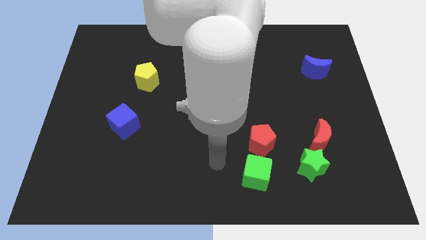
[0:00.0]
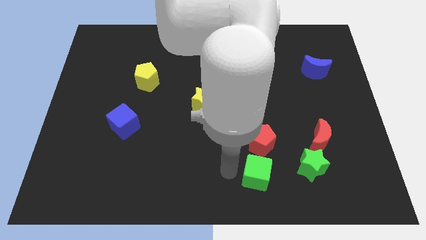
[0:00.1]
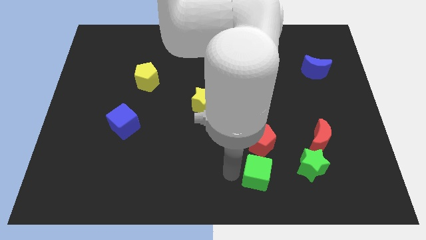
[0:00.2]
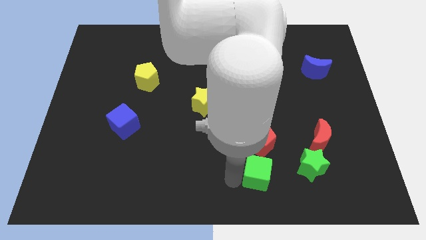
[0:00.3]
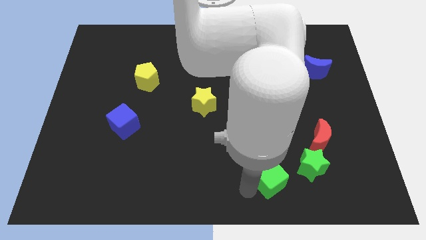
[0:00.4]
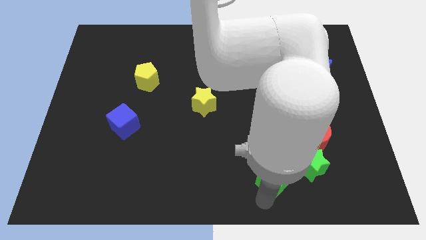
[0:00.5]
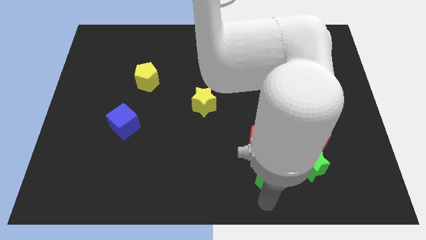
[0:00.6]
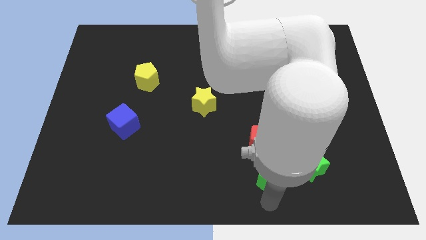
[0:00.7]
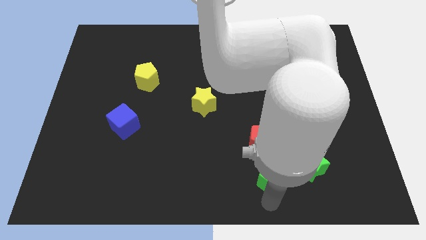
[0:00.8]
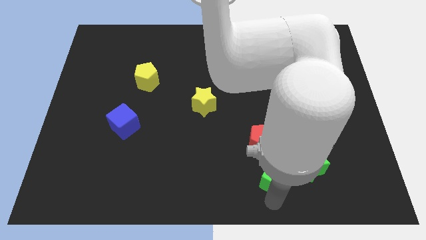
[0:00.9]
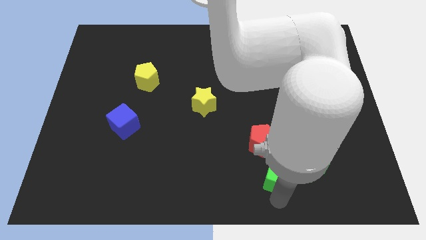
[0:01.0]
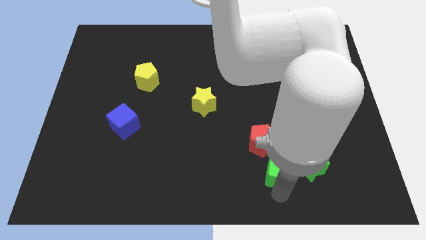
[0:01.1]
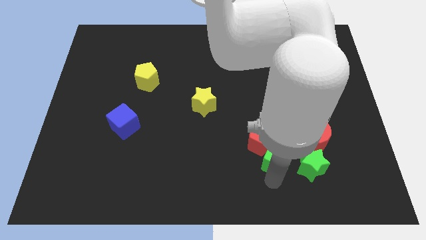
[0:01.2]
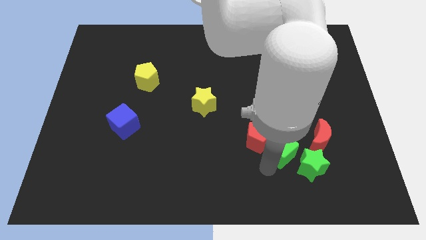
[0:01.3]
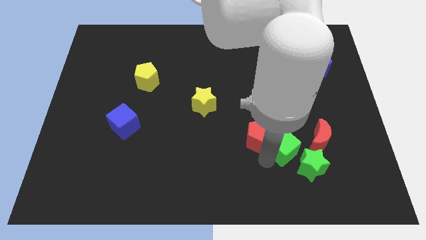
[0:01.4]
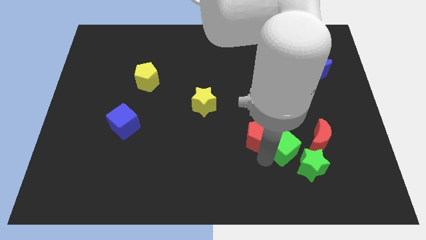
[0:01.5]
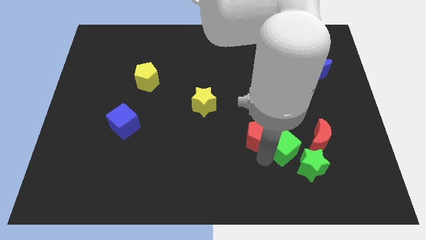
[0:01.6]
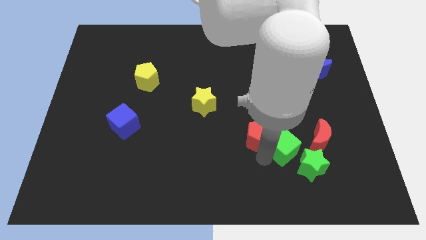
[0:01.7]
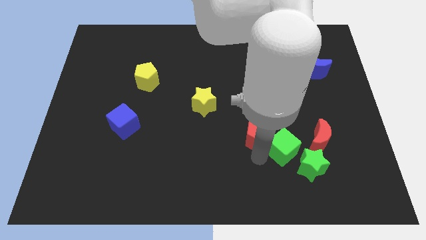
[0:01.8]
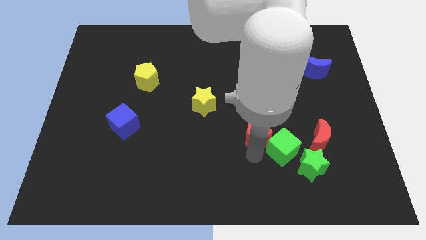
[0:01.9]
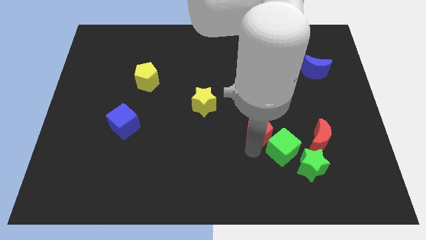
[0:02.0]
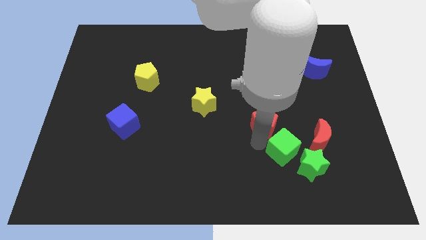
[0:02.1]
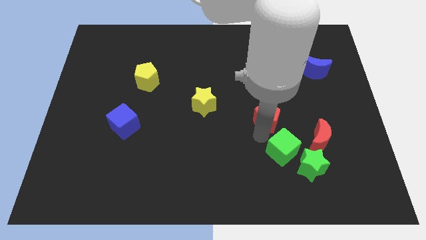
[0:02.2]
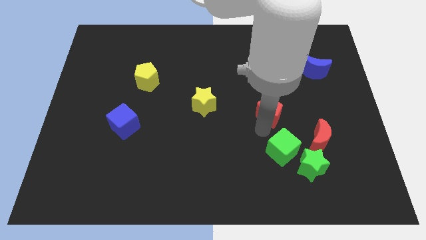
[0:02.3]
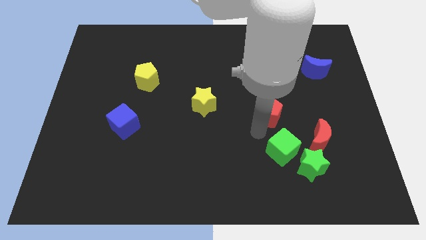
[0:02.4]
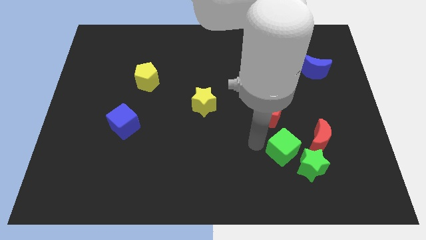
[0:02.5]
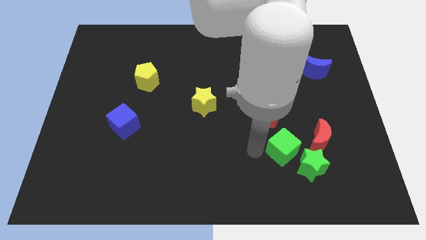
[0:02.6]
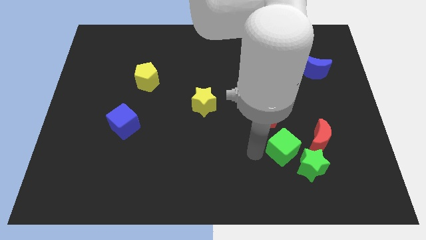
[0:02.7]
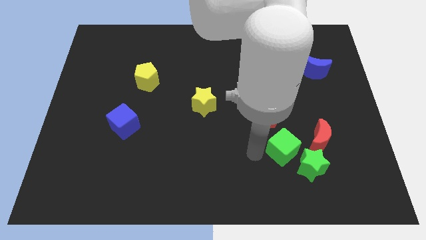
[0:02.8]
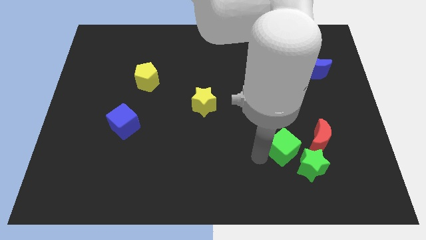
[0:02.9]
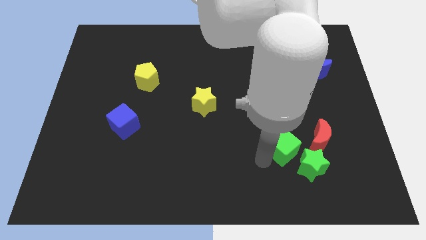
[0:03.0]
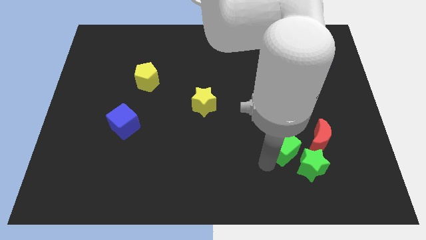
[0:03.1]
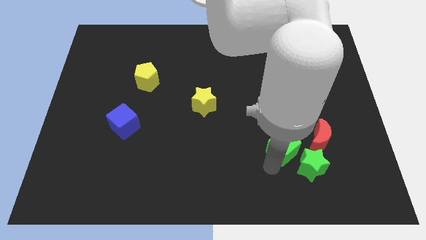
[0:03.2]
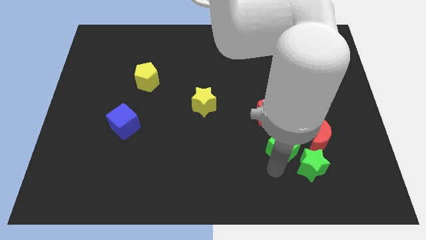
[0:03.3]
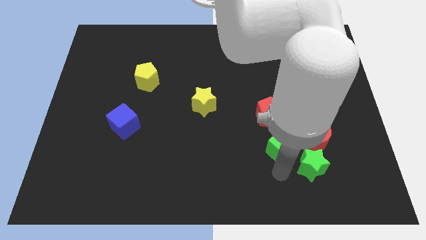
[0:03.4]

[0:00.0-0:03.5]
slightly push the green cube upwards

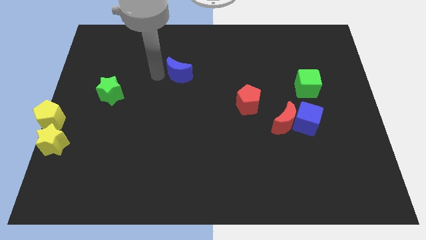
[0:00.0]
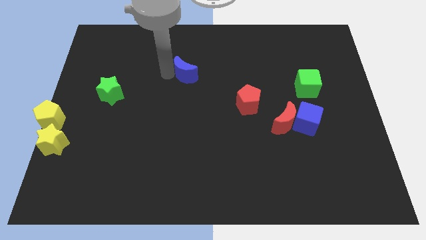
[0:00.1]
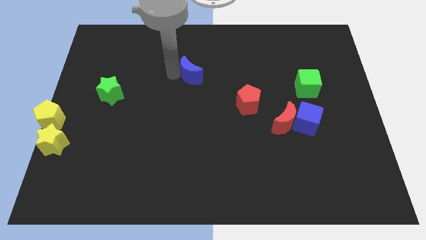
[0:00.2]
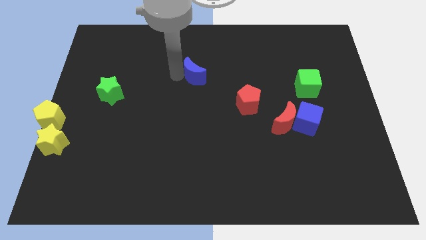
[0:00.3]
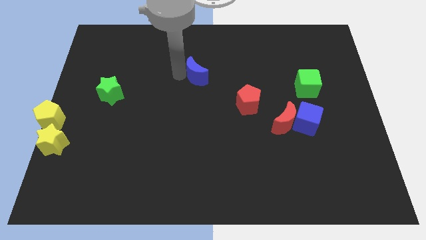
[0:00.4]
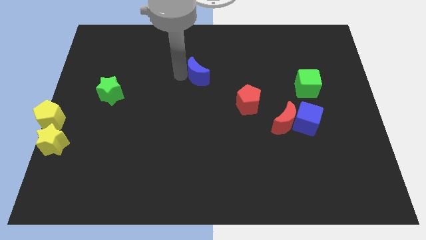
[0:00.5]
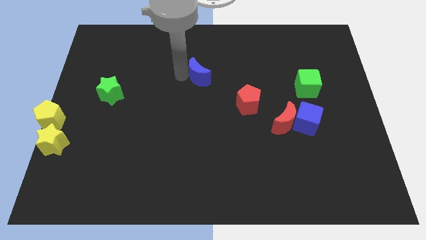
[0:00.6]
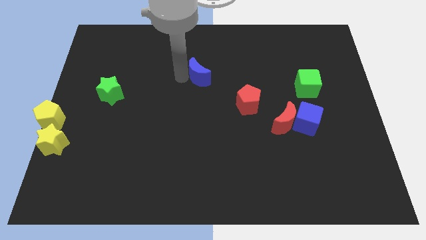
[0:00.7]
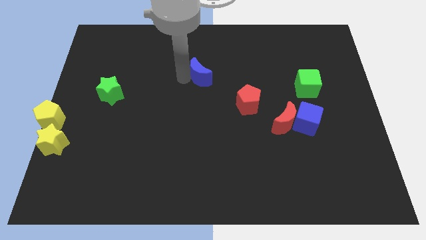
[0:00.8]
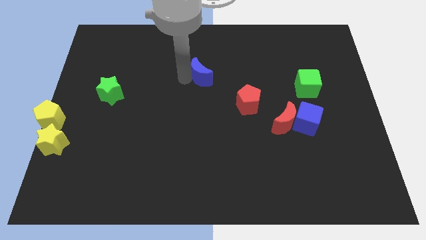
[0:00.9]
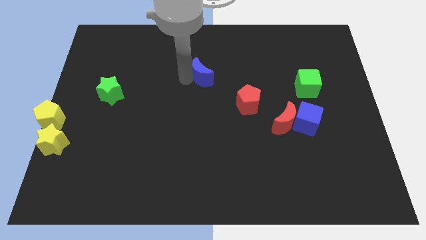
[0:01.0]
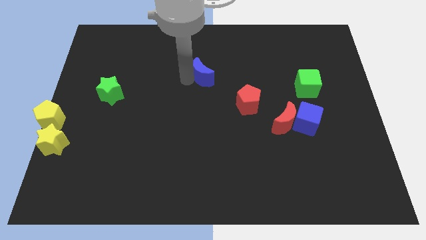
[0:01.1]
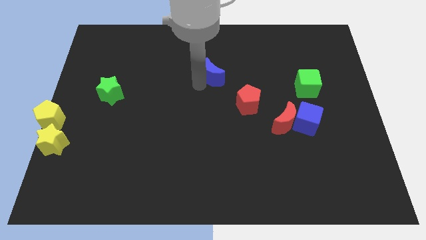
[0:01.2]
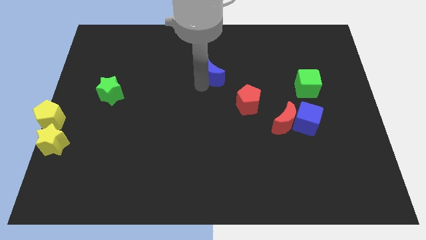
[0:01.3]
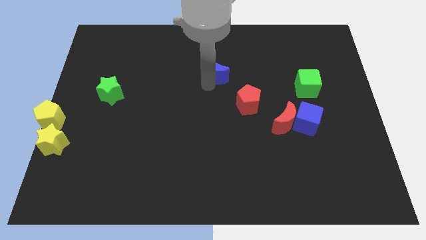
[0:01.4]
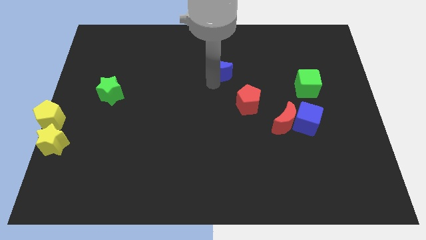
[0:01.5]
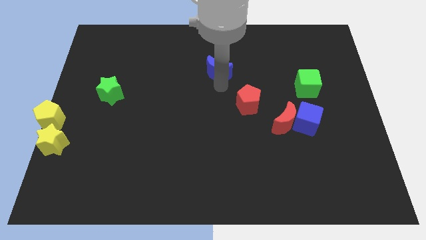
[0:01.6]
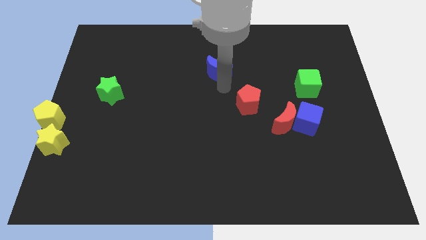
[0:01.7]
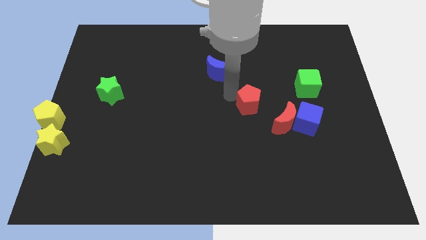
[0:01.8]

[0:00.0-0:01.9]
move the blue crescent to the top center

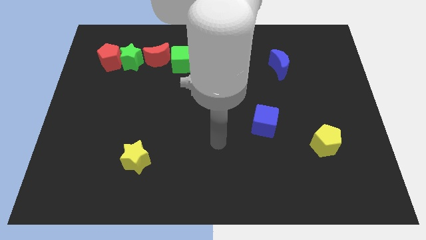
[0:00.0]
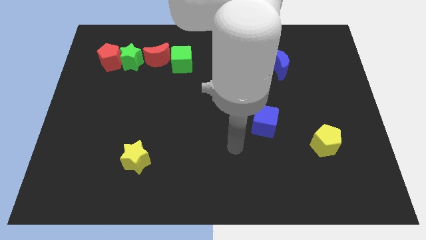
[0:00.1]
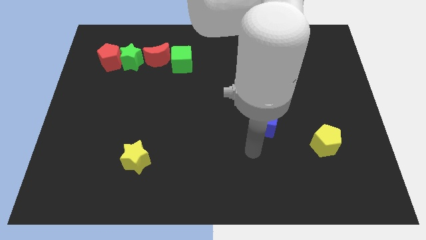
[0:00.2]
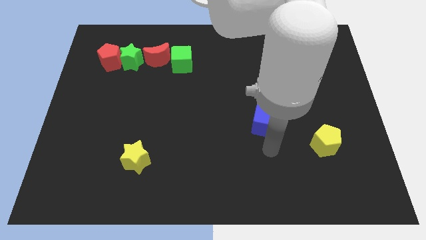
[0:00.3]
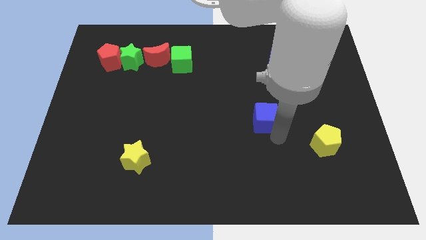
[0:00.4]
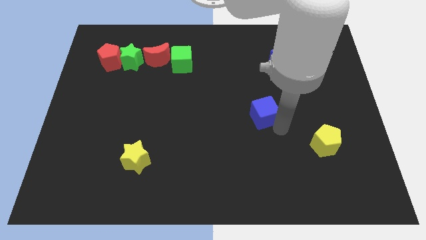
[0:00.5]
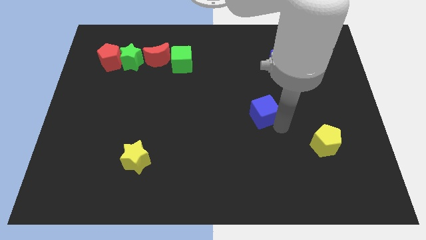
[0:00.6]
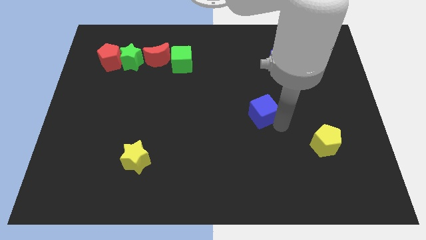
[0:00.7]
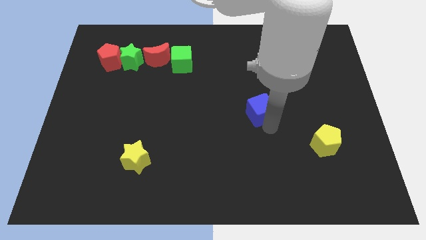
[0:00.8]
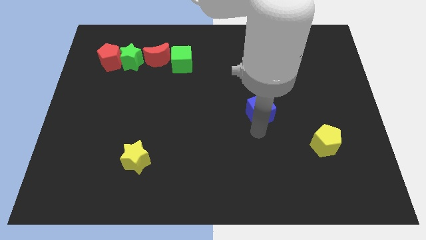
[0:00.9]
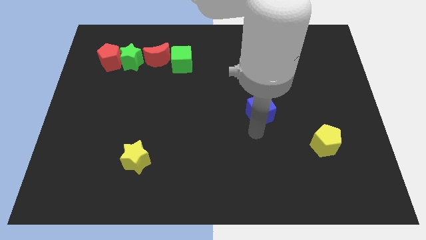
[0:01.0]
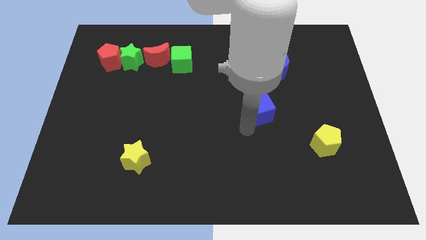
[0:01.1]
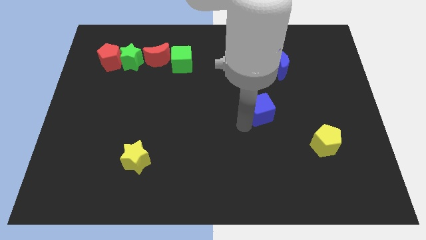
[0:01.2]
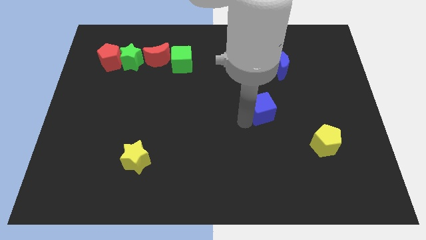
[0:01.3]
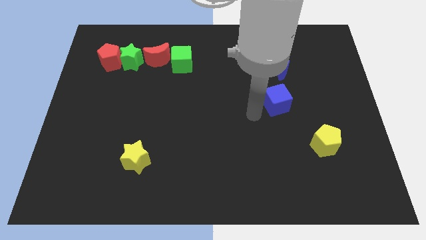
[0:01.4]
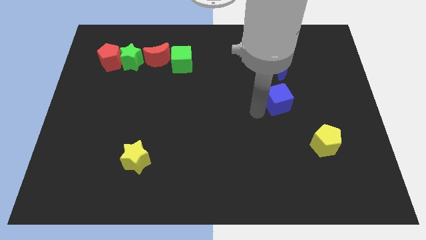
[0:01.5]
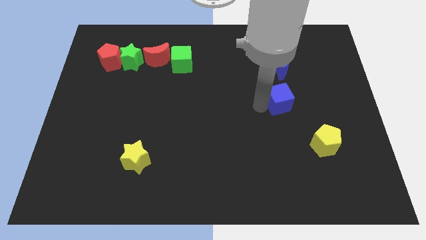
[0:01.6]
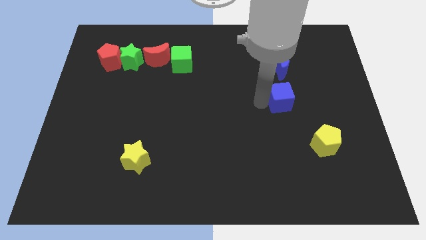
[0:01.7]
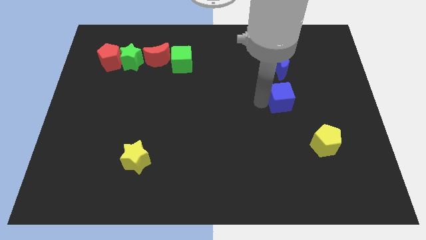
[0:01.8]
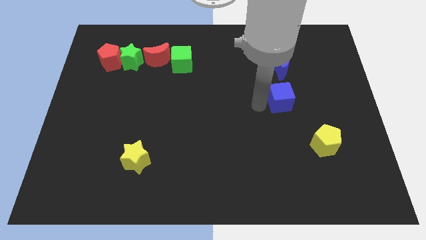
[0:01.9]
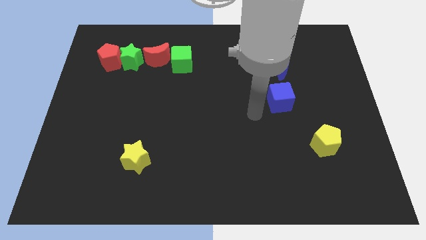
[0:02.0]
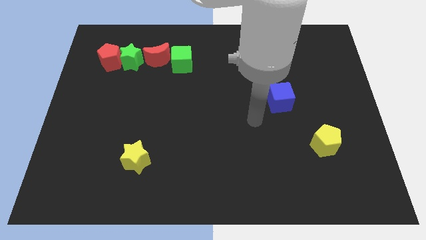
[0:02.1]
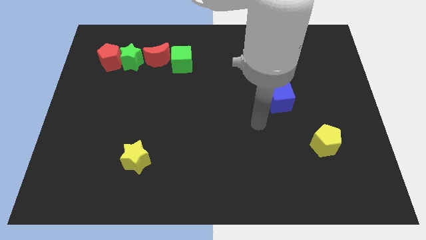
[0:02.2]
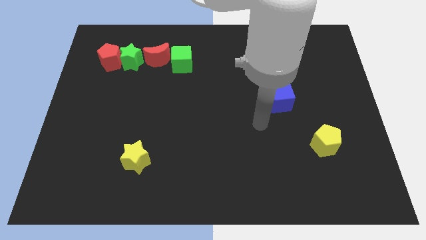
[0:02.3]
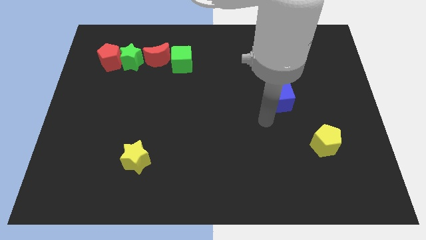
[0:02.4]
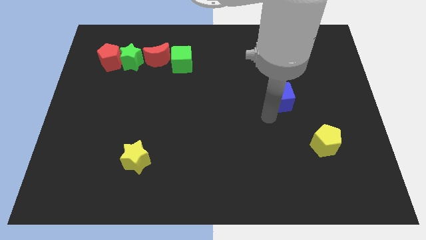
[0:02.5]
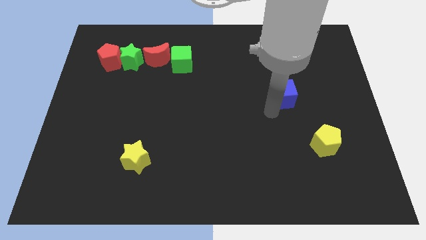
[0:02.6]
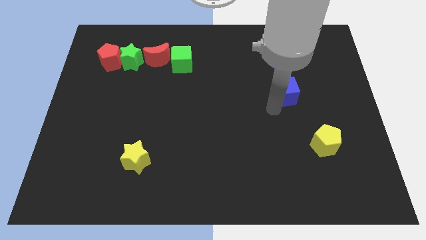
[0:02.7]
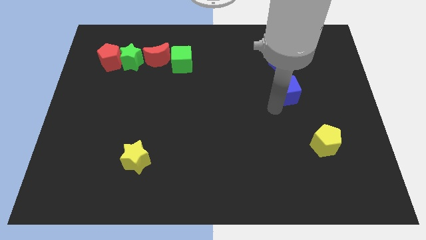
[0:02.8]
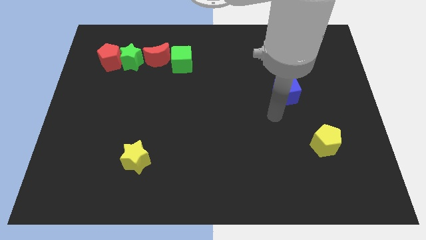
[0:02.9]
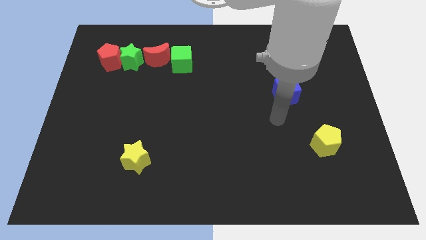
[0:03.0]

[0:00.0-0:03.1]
move blue cube towards the blue crescent

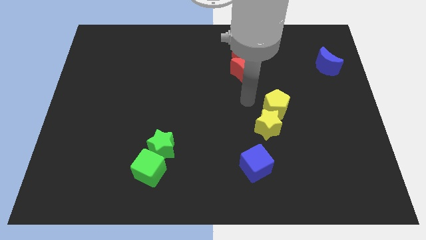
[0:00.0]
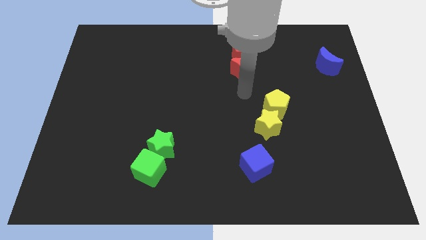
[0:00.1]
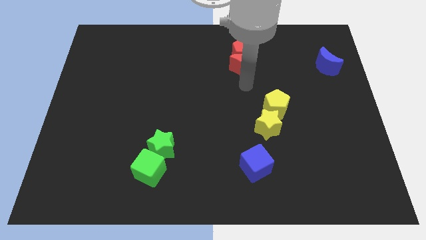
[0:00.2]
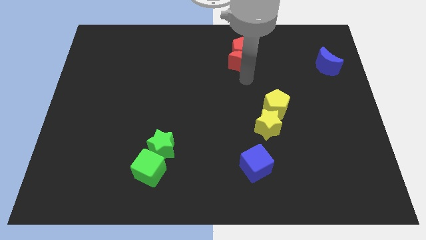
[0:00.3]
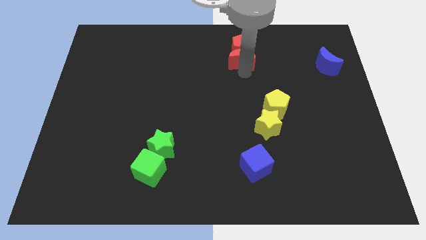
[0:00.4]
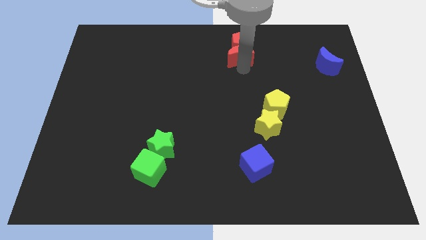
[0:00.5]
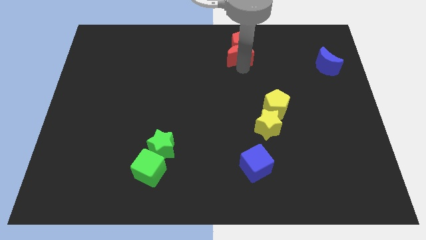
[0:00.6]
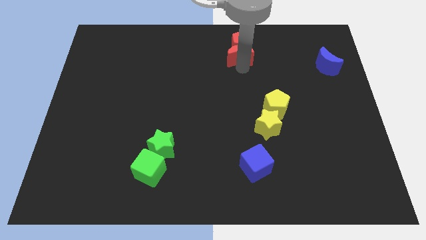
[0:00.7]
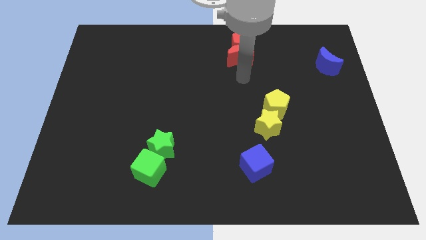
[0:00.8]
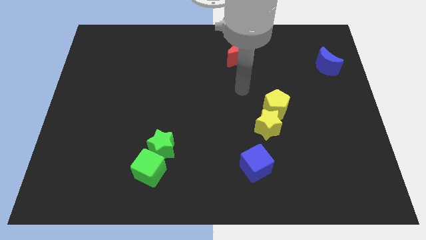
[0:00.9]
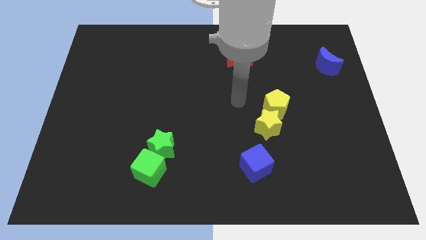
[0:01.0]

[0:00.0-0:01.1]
push the red moon into the red pentagon
